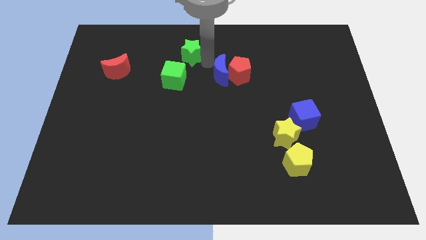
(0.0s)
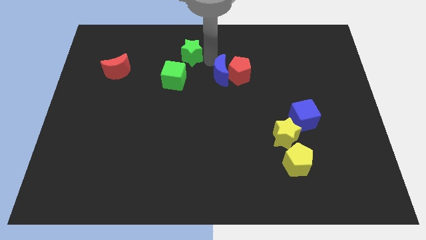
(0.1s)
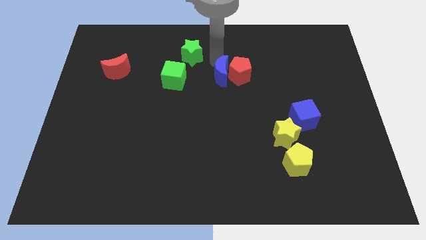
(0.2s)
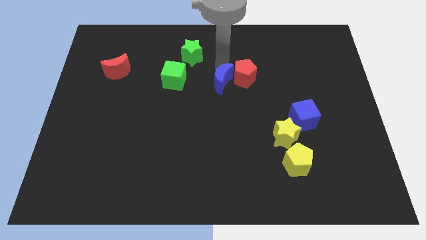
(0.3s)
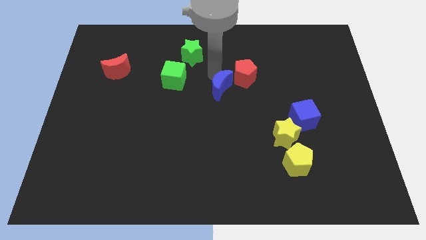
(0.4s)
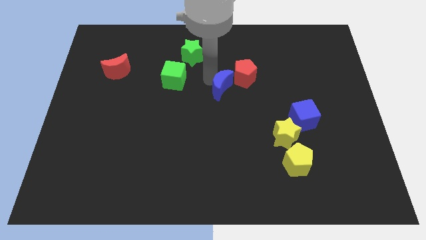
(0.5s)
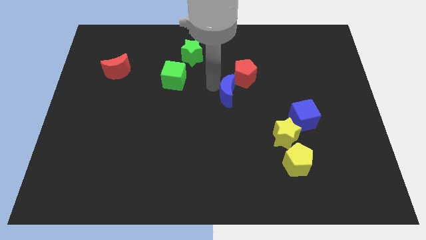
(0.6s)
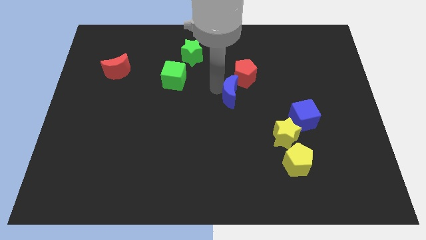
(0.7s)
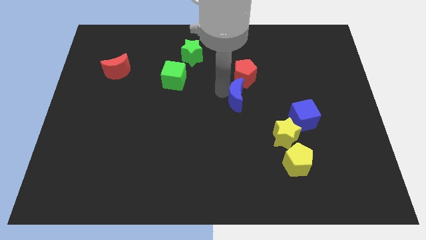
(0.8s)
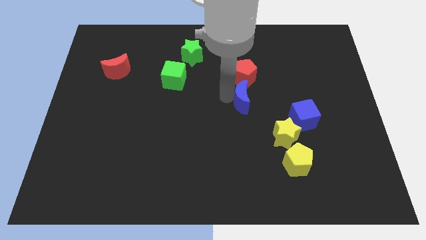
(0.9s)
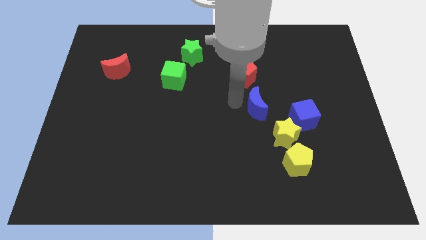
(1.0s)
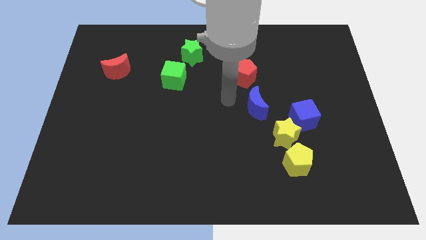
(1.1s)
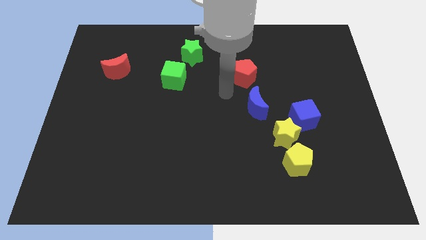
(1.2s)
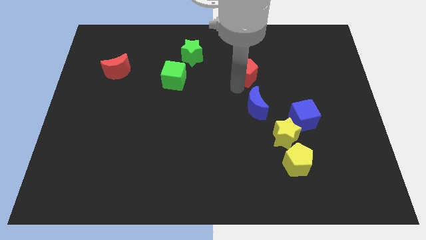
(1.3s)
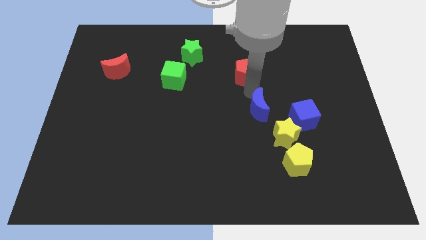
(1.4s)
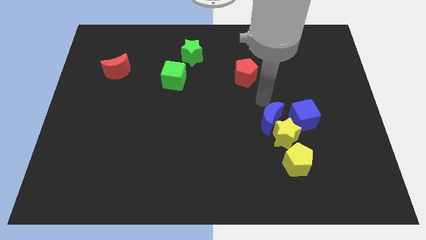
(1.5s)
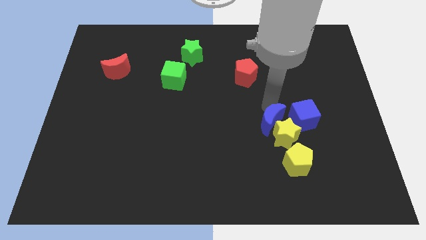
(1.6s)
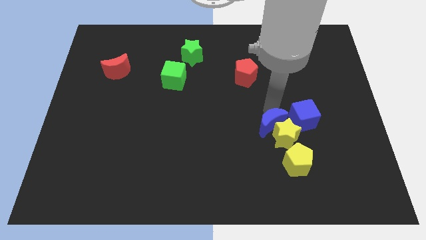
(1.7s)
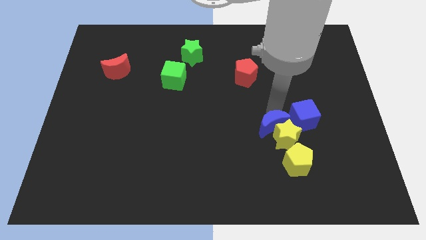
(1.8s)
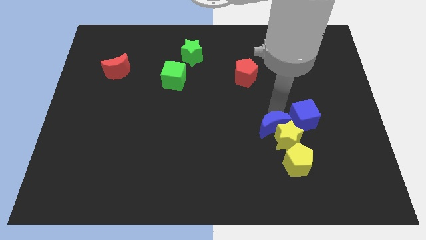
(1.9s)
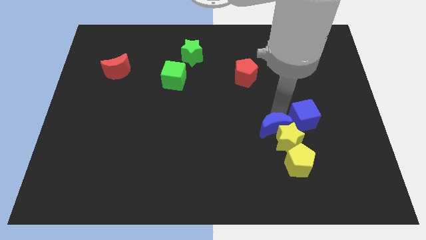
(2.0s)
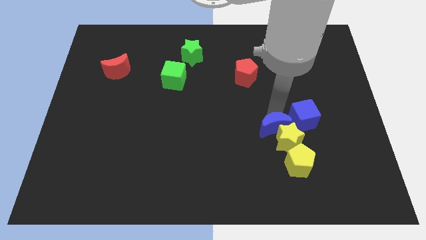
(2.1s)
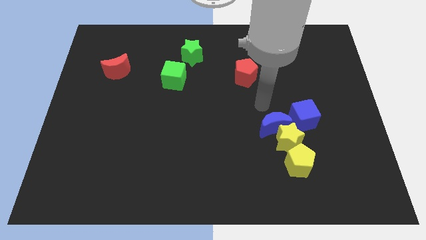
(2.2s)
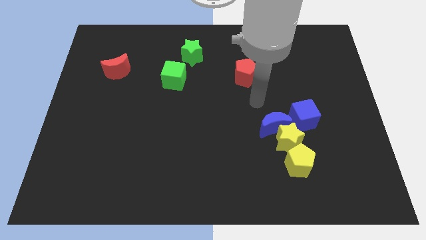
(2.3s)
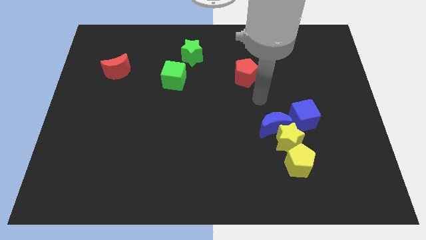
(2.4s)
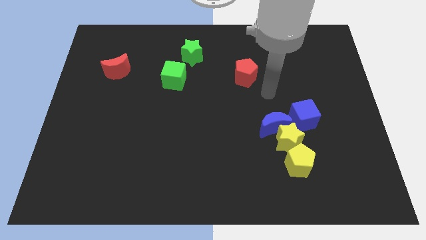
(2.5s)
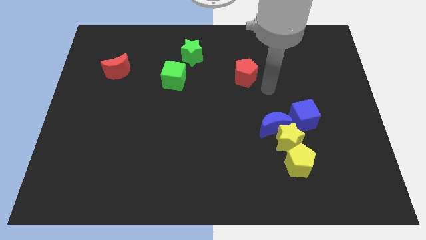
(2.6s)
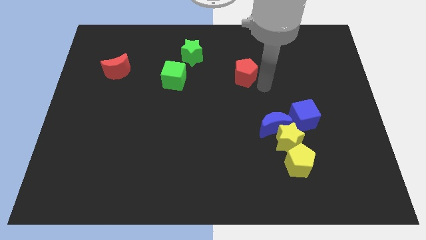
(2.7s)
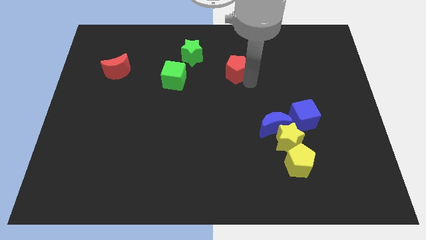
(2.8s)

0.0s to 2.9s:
add the blue crescent to the group of both yellow blocks and blue cube

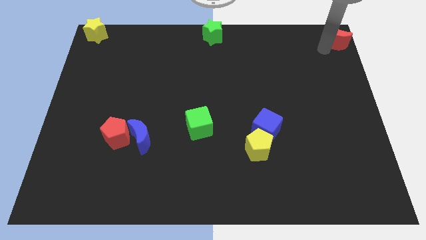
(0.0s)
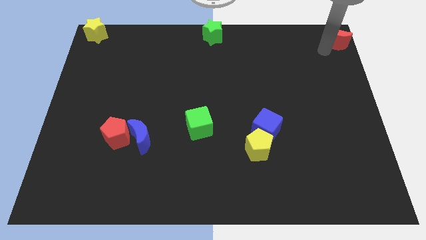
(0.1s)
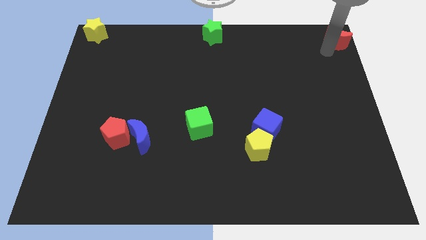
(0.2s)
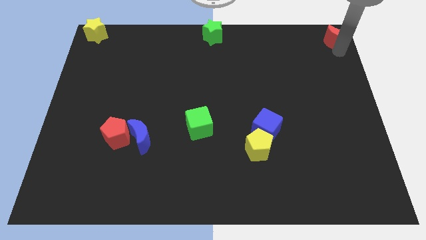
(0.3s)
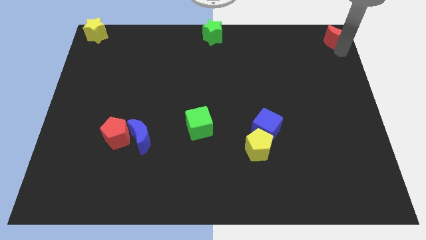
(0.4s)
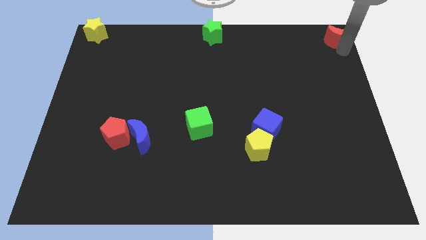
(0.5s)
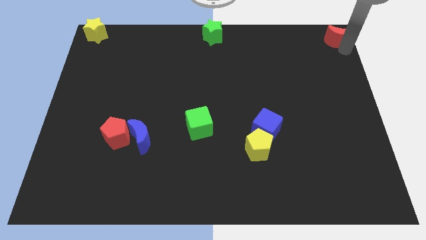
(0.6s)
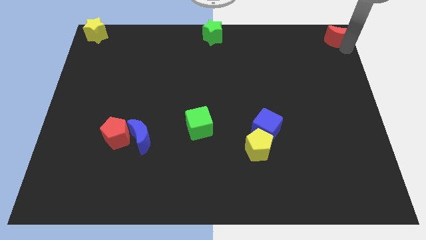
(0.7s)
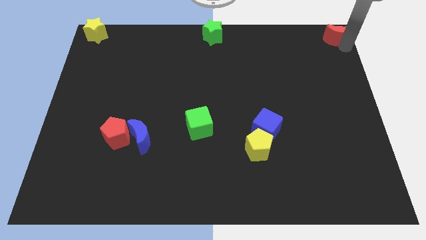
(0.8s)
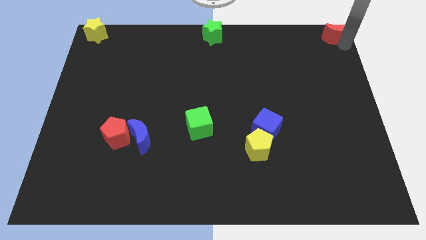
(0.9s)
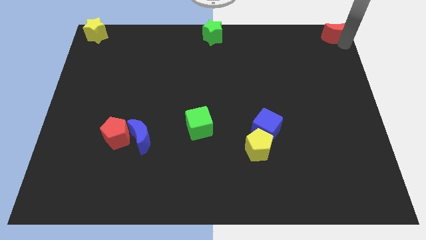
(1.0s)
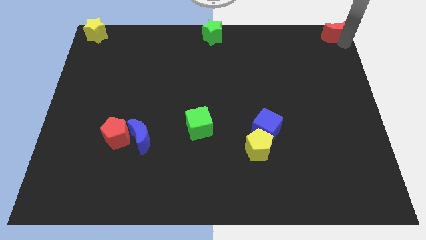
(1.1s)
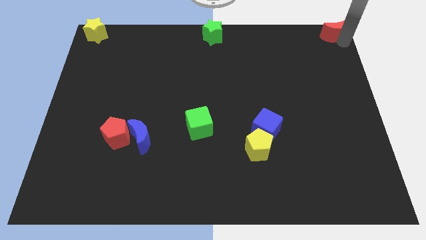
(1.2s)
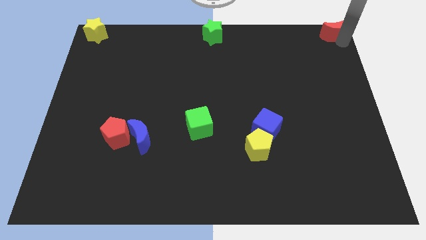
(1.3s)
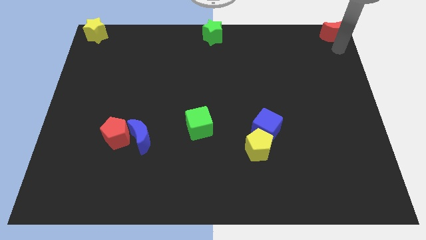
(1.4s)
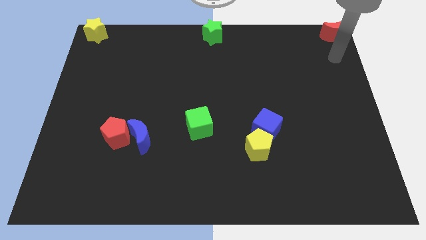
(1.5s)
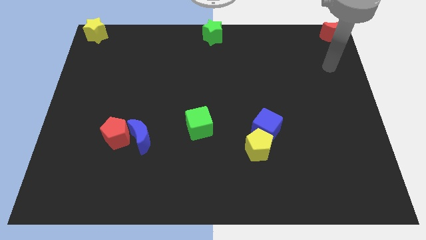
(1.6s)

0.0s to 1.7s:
push the red crescent to the top right corner of the board

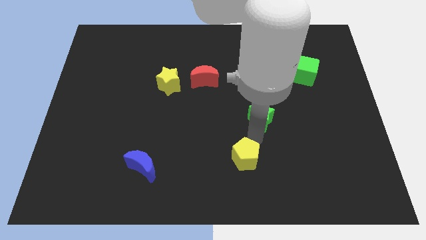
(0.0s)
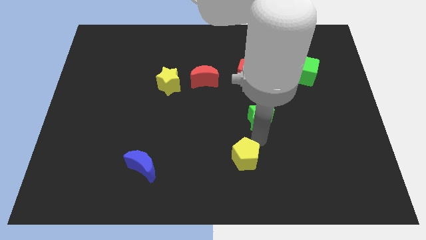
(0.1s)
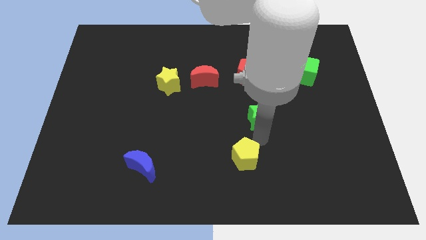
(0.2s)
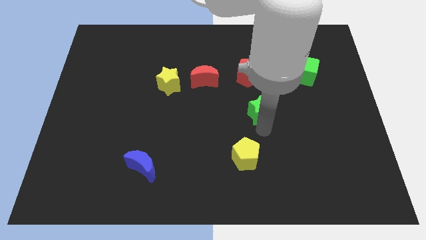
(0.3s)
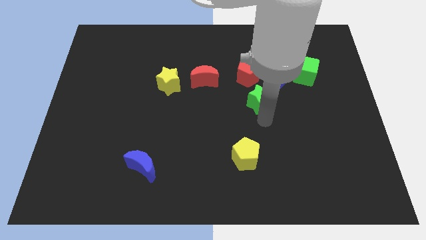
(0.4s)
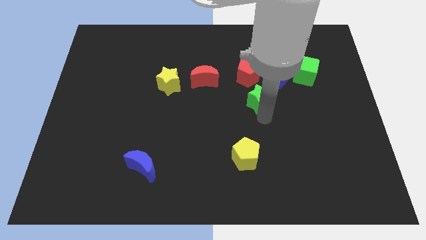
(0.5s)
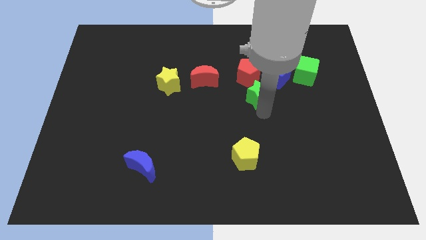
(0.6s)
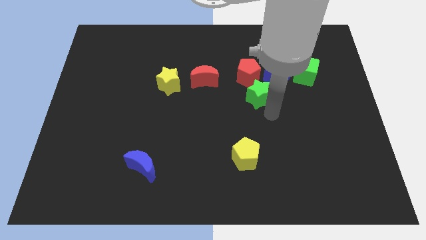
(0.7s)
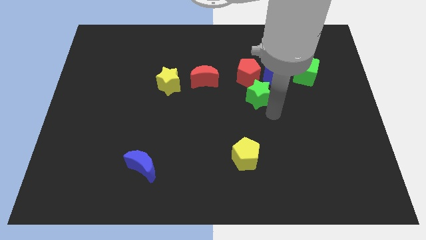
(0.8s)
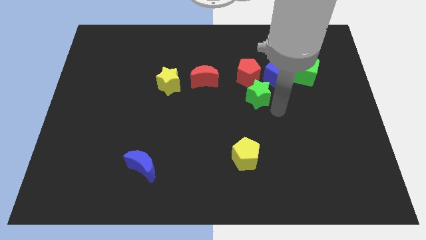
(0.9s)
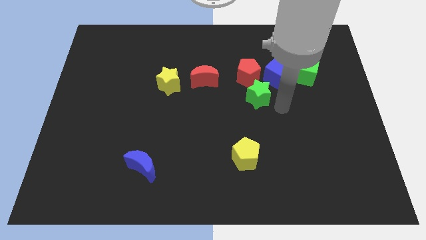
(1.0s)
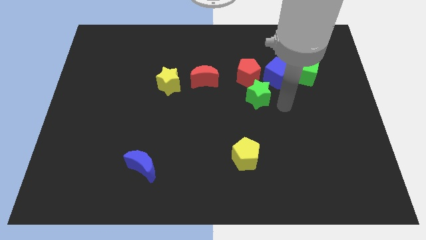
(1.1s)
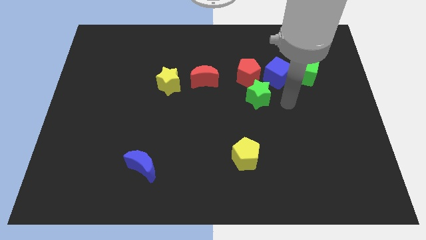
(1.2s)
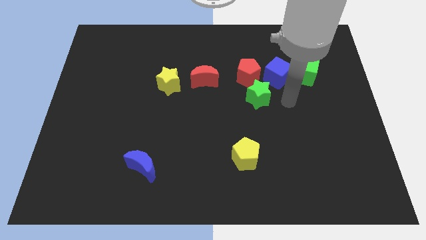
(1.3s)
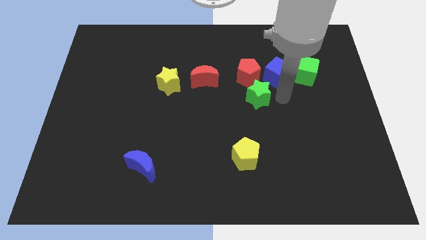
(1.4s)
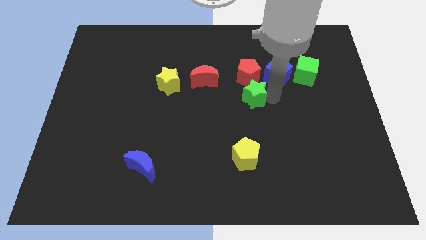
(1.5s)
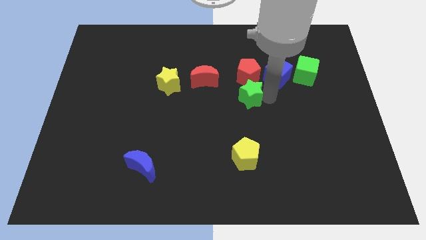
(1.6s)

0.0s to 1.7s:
place the green star below the red pentagon

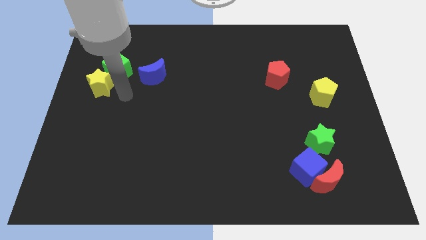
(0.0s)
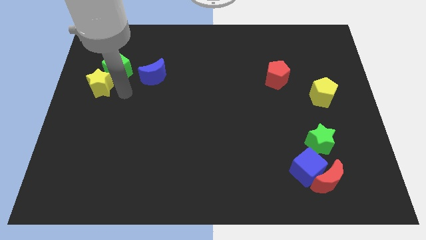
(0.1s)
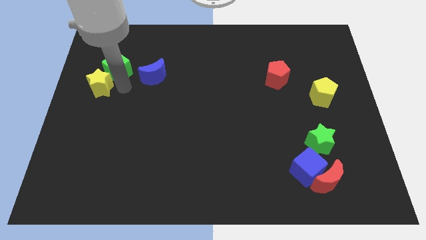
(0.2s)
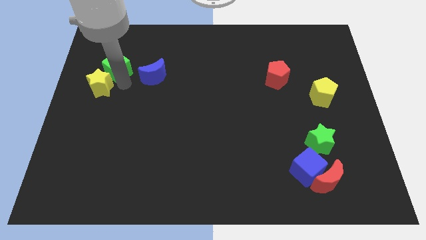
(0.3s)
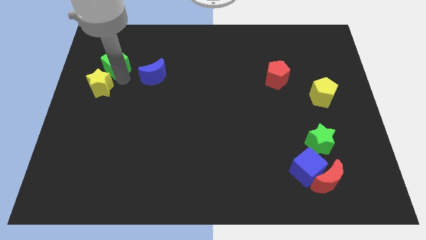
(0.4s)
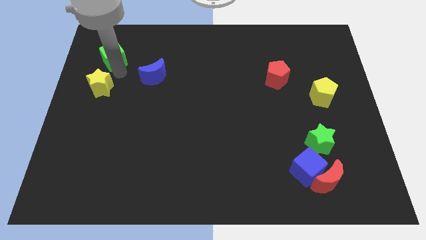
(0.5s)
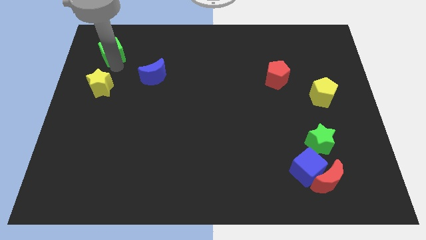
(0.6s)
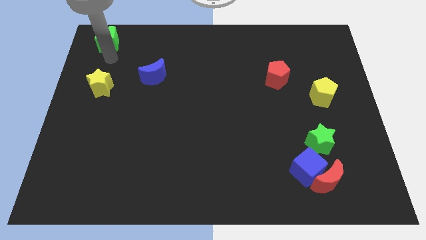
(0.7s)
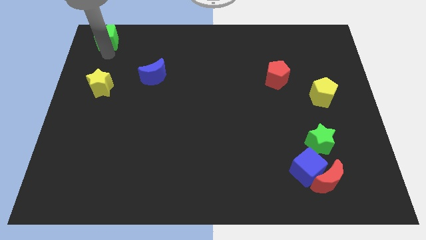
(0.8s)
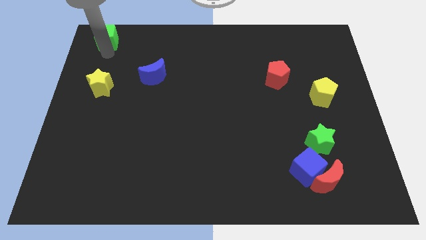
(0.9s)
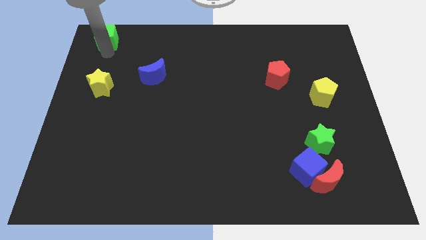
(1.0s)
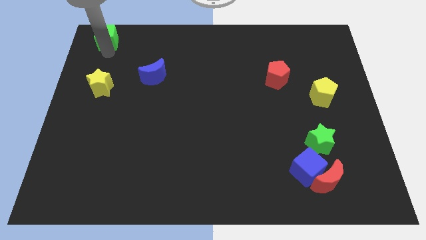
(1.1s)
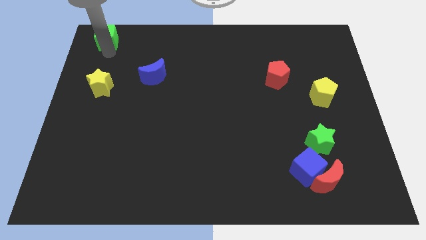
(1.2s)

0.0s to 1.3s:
separate the green cube from the yellow star and the blue crescent

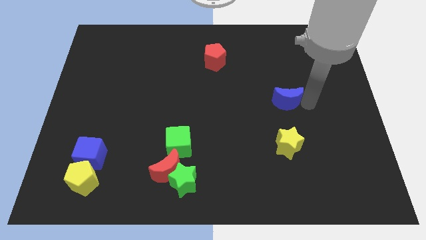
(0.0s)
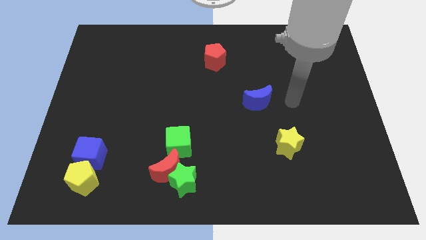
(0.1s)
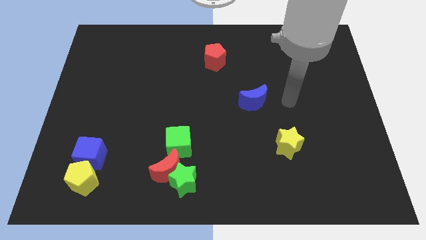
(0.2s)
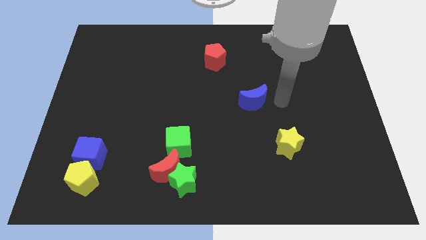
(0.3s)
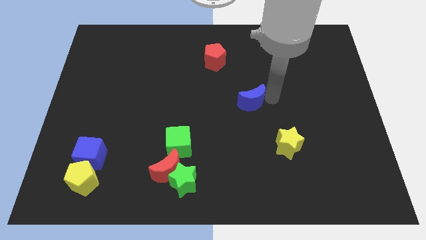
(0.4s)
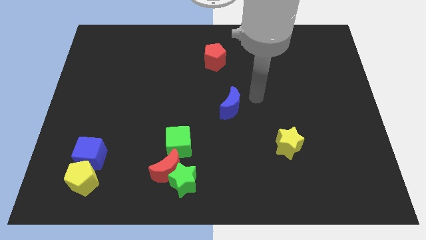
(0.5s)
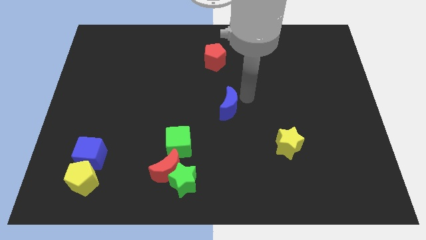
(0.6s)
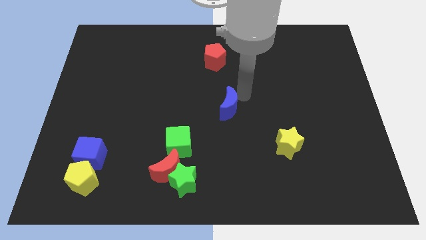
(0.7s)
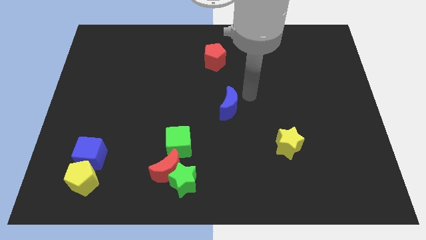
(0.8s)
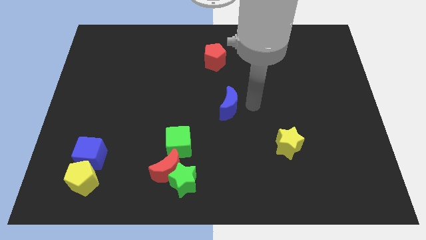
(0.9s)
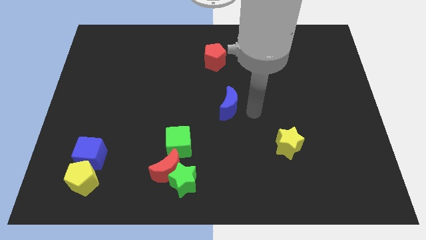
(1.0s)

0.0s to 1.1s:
move blue crescent to center

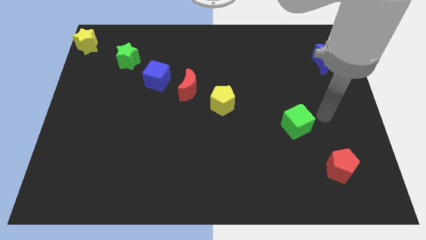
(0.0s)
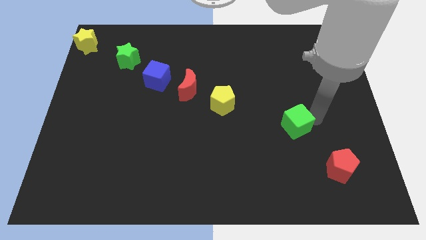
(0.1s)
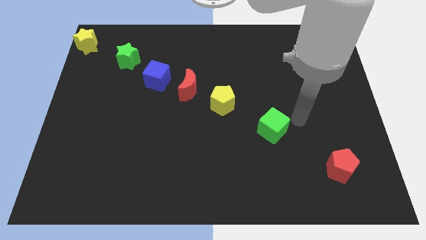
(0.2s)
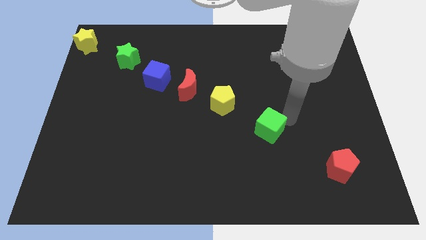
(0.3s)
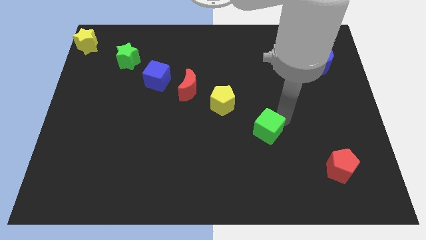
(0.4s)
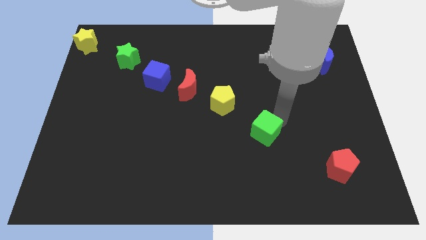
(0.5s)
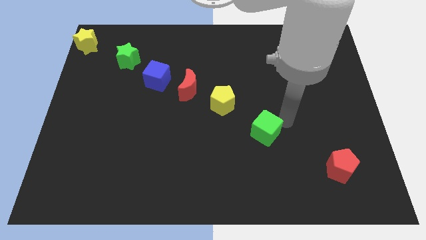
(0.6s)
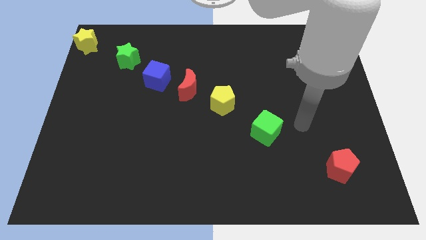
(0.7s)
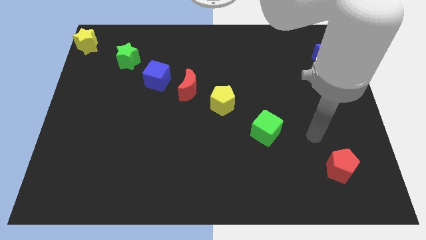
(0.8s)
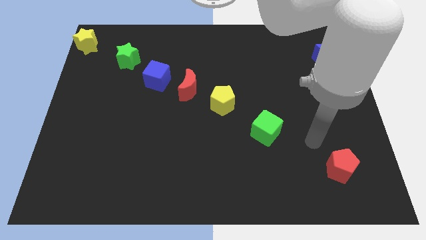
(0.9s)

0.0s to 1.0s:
place green cube below yellow pentagon
